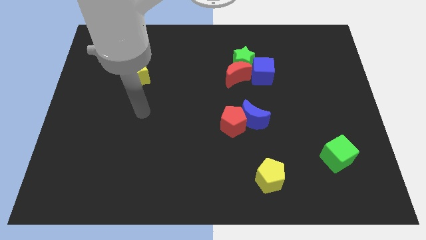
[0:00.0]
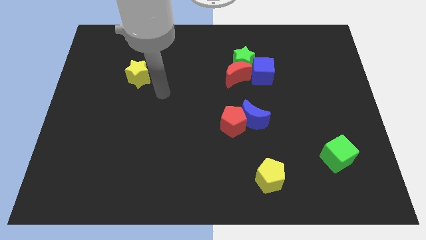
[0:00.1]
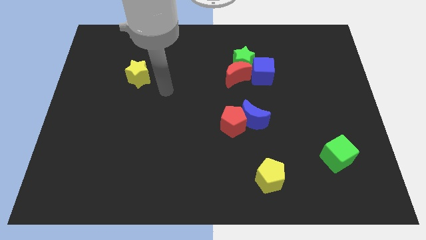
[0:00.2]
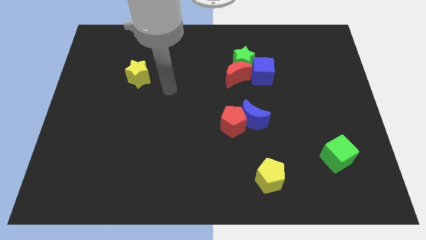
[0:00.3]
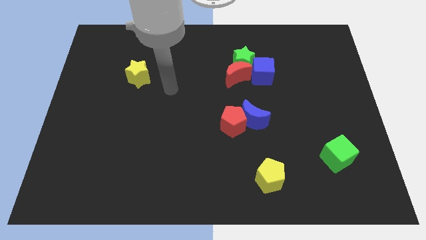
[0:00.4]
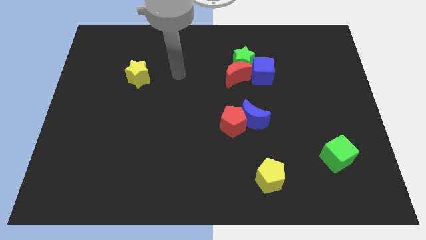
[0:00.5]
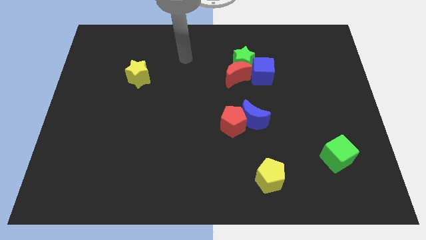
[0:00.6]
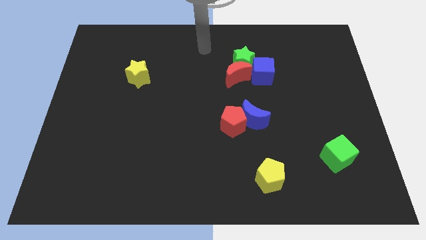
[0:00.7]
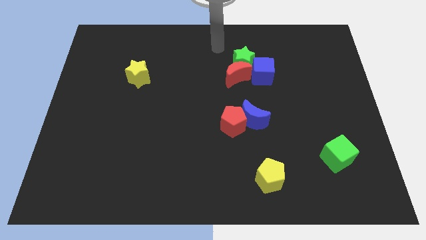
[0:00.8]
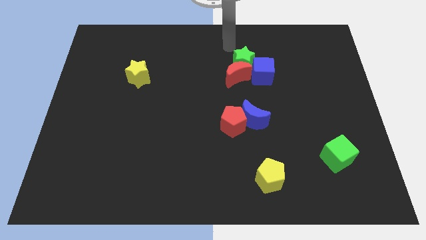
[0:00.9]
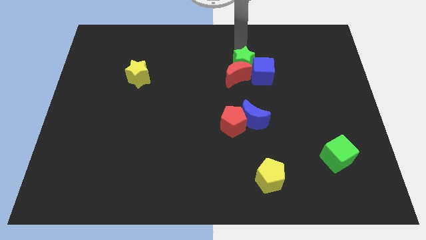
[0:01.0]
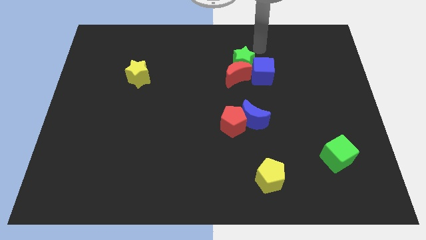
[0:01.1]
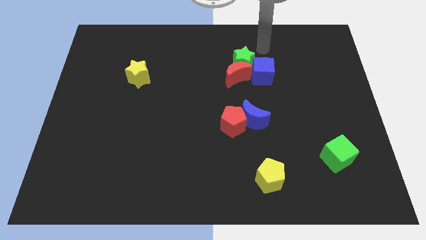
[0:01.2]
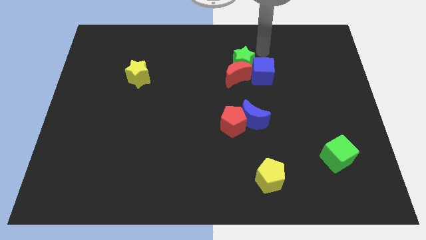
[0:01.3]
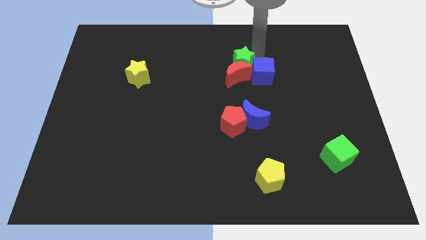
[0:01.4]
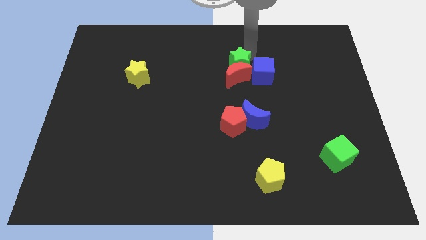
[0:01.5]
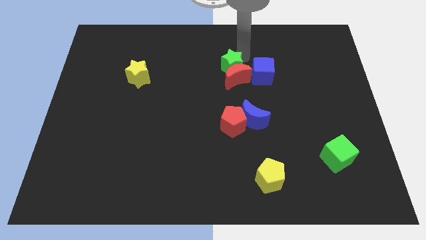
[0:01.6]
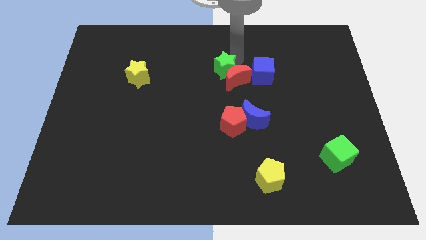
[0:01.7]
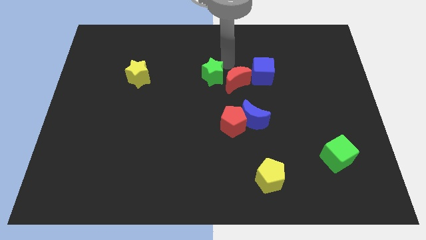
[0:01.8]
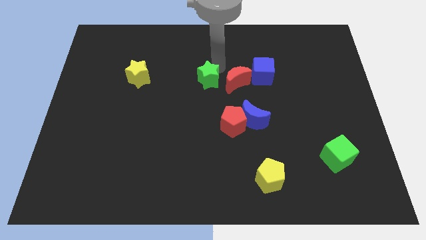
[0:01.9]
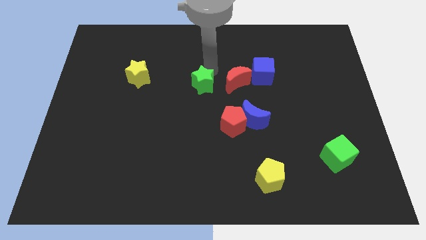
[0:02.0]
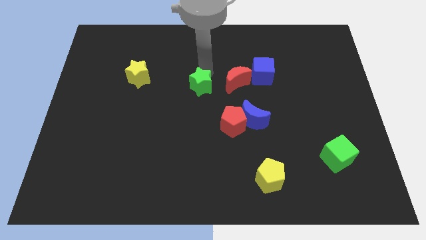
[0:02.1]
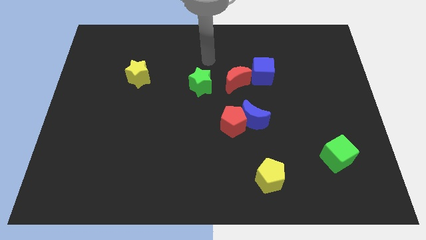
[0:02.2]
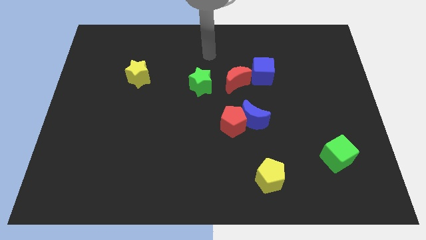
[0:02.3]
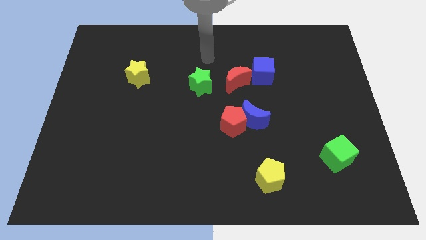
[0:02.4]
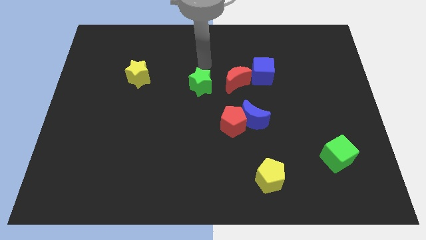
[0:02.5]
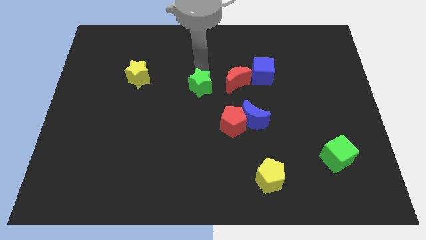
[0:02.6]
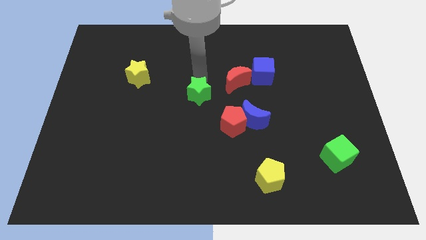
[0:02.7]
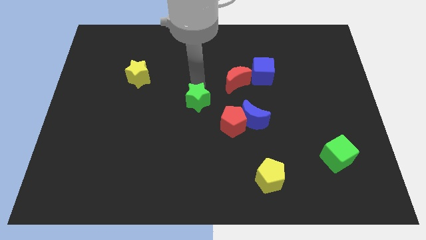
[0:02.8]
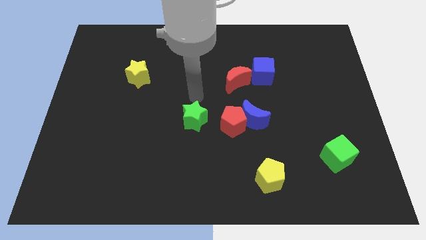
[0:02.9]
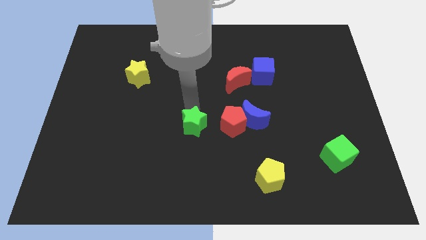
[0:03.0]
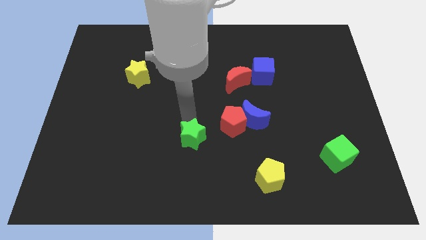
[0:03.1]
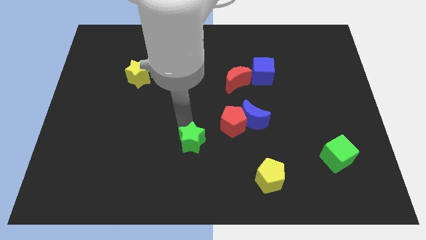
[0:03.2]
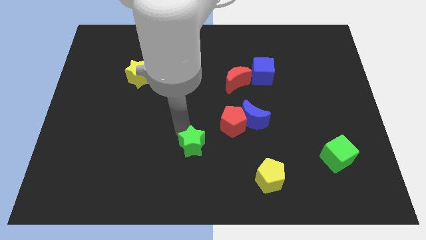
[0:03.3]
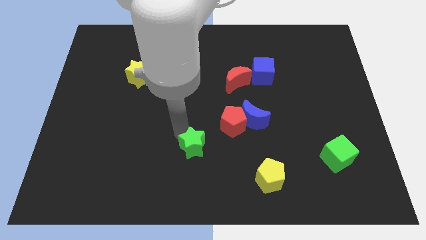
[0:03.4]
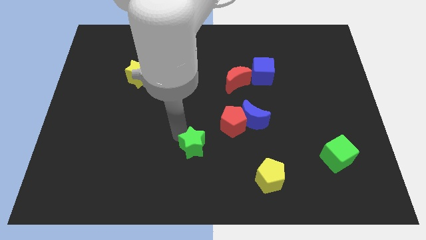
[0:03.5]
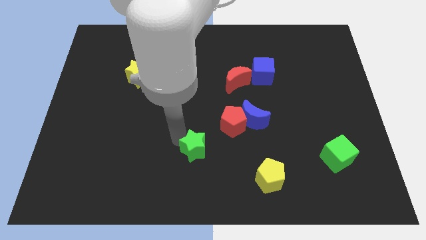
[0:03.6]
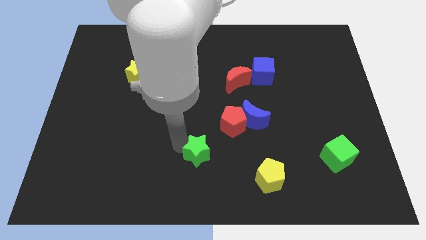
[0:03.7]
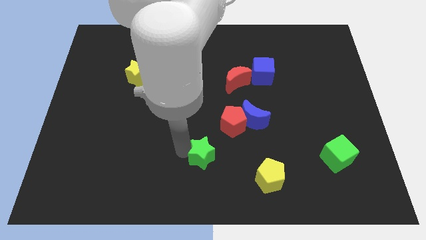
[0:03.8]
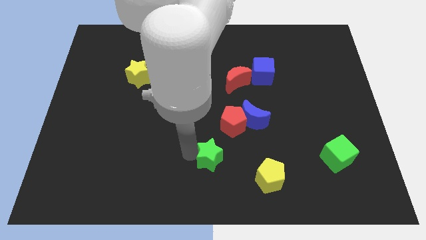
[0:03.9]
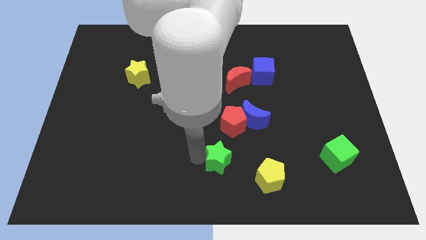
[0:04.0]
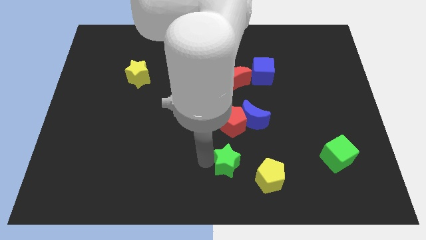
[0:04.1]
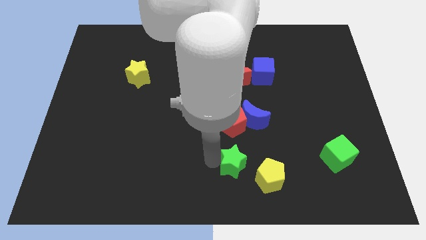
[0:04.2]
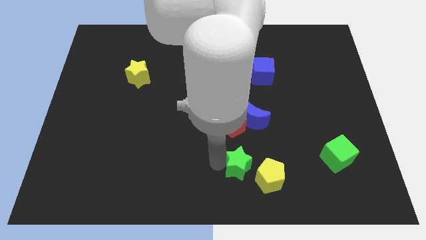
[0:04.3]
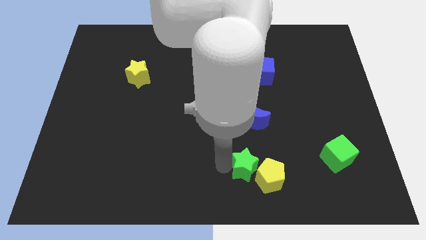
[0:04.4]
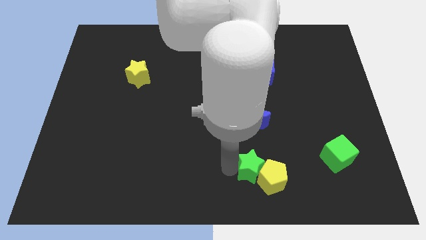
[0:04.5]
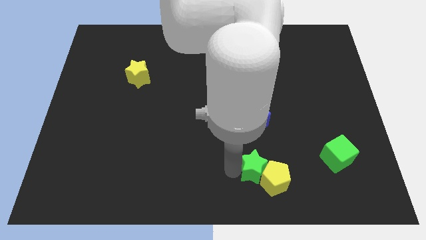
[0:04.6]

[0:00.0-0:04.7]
put the green star to the yellow pentagon

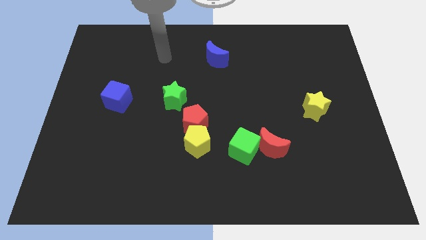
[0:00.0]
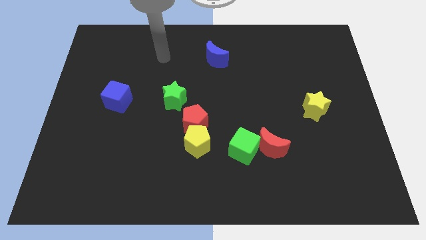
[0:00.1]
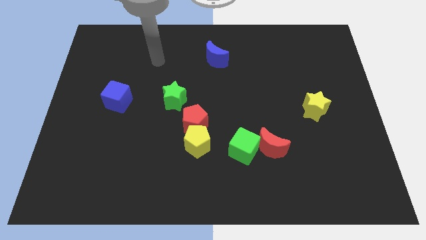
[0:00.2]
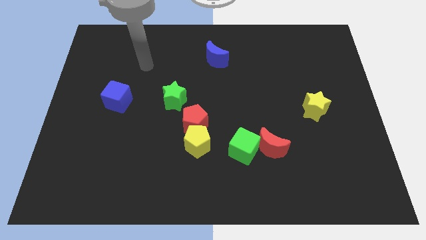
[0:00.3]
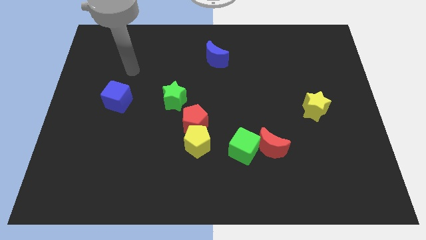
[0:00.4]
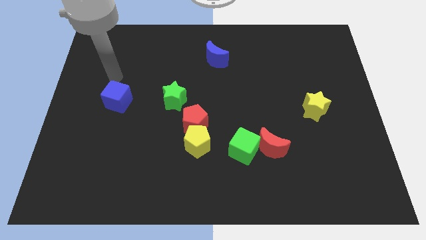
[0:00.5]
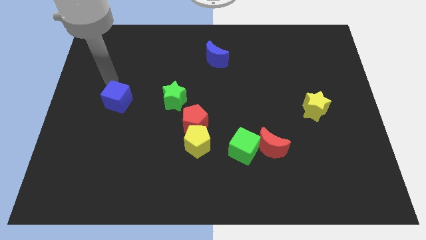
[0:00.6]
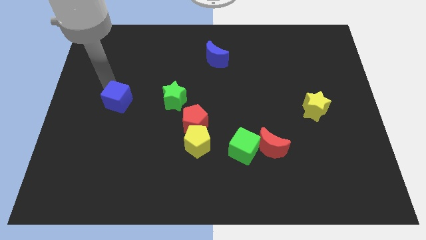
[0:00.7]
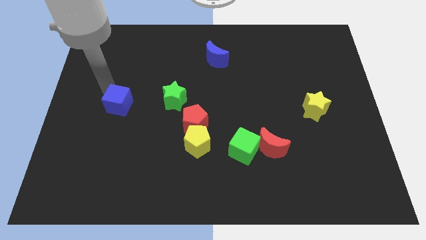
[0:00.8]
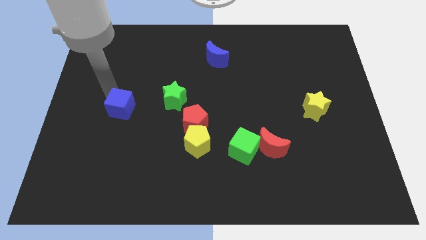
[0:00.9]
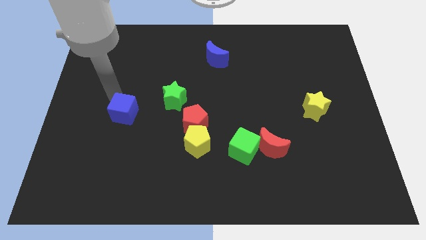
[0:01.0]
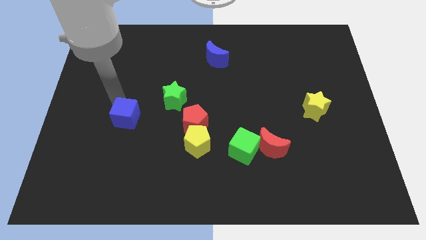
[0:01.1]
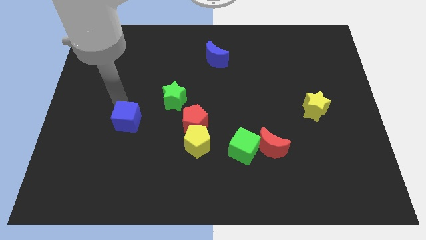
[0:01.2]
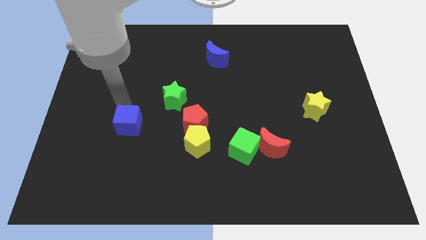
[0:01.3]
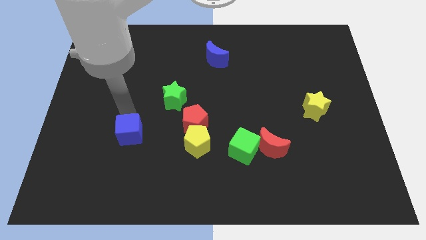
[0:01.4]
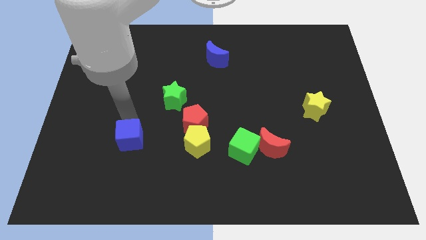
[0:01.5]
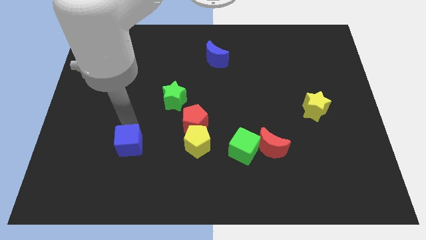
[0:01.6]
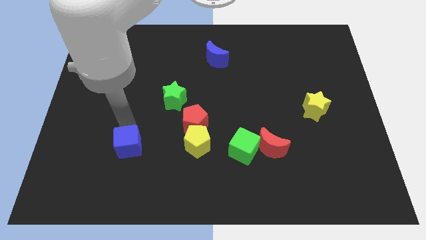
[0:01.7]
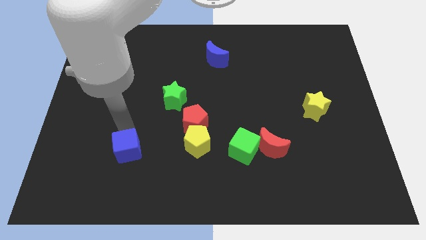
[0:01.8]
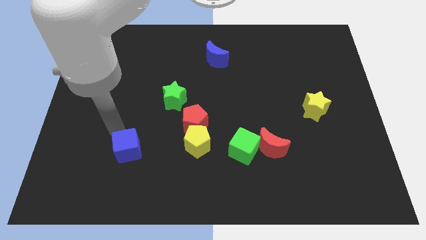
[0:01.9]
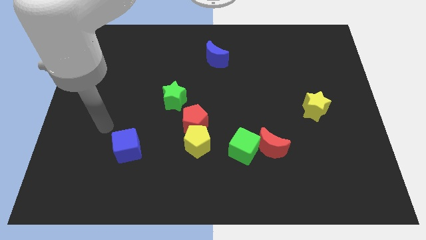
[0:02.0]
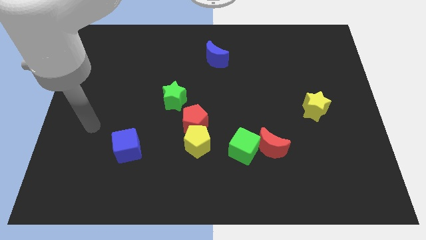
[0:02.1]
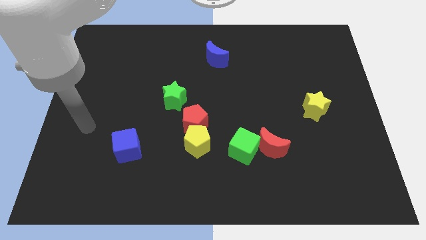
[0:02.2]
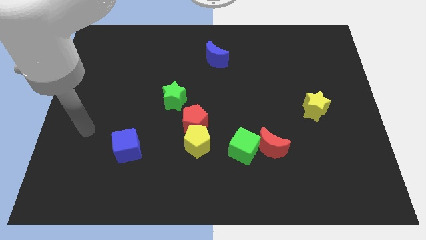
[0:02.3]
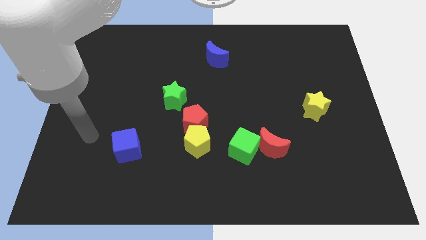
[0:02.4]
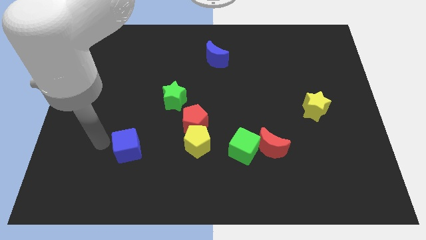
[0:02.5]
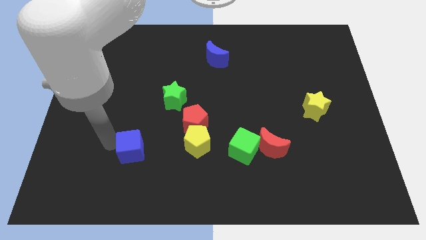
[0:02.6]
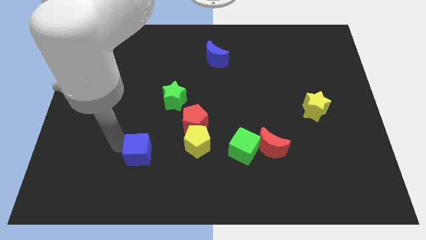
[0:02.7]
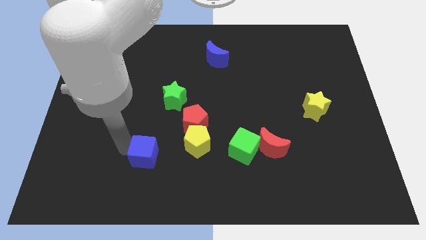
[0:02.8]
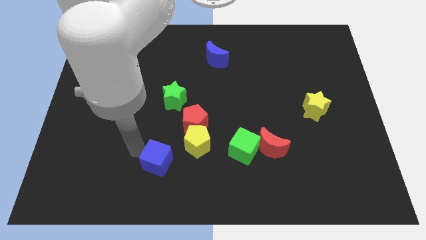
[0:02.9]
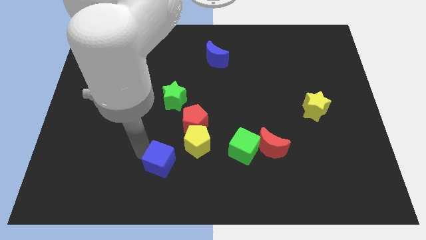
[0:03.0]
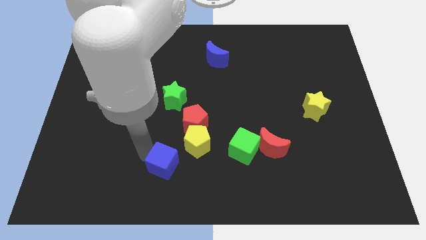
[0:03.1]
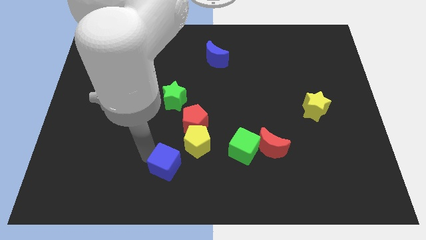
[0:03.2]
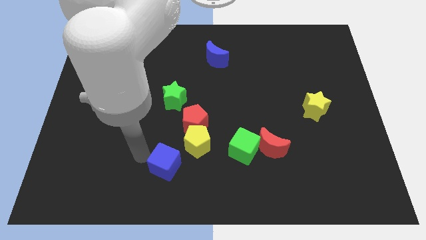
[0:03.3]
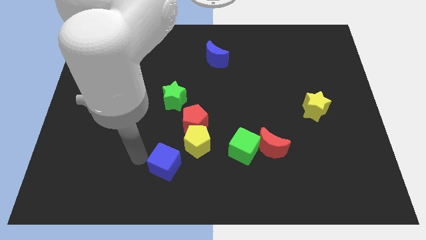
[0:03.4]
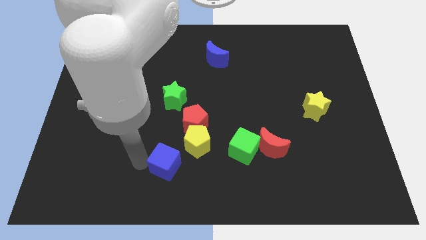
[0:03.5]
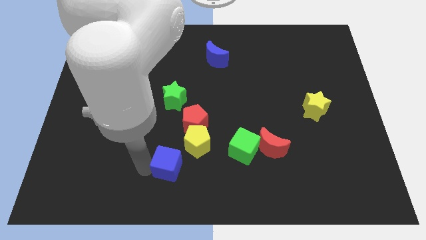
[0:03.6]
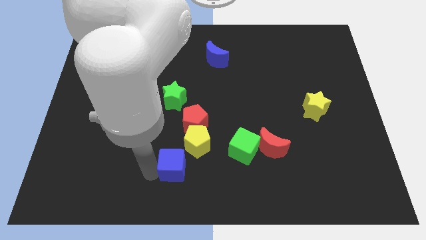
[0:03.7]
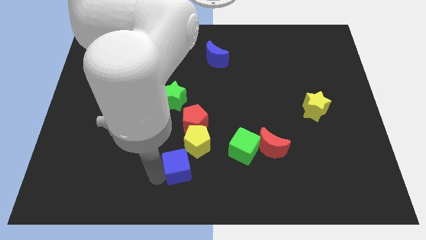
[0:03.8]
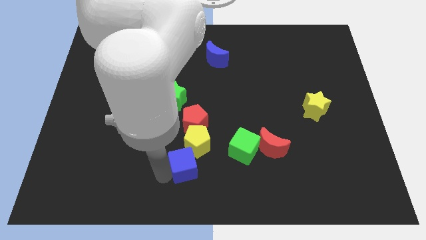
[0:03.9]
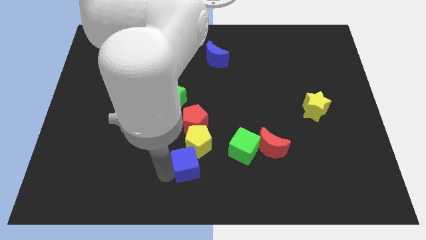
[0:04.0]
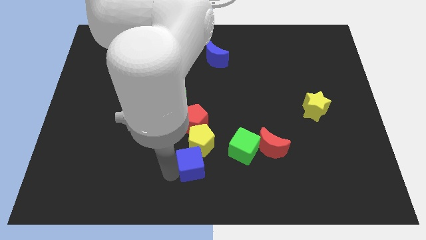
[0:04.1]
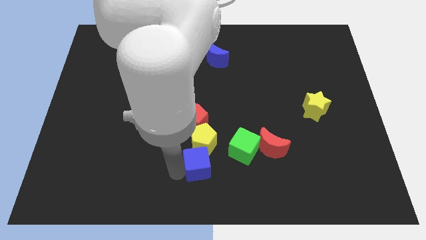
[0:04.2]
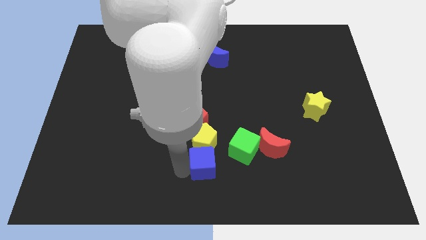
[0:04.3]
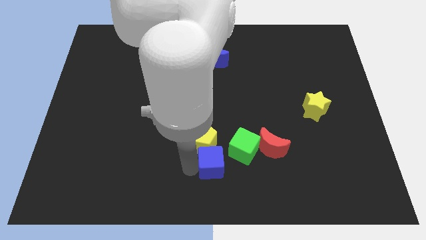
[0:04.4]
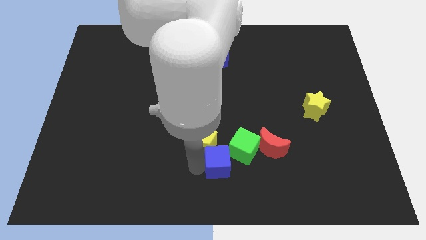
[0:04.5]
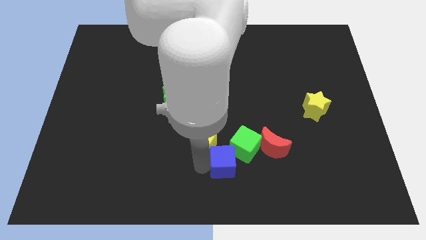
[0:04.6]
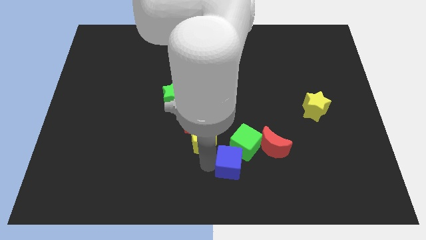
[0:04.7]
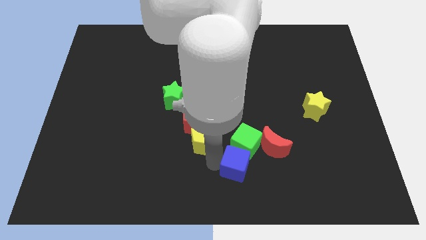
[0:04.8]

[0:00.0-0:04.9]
push the blue cube next to the green cube
